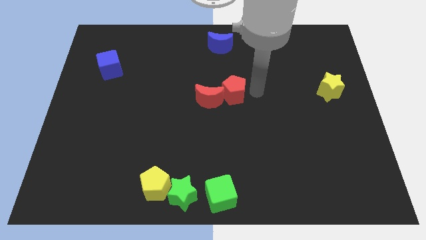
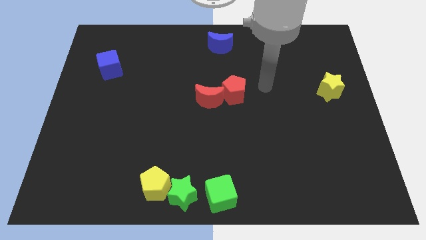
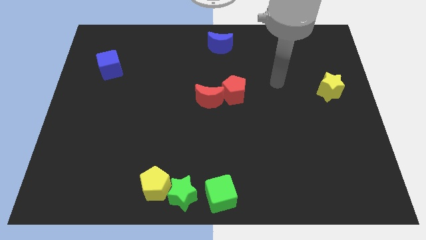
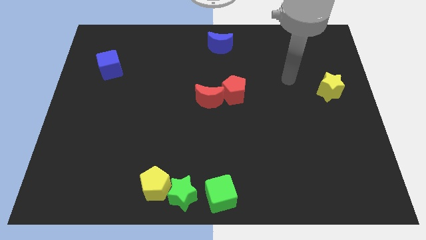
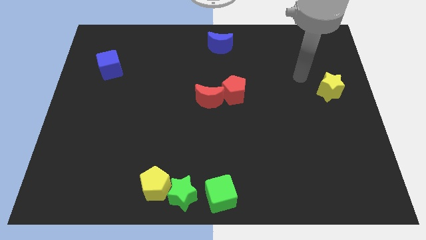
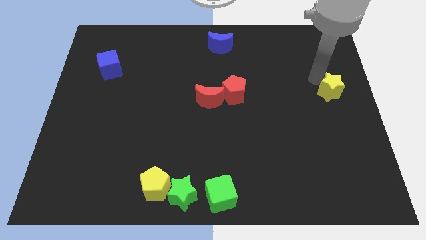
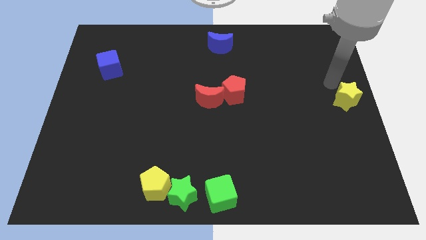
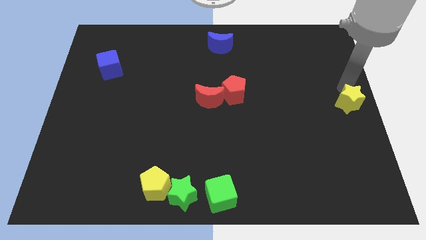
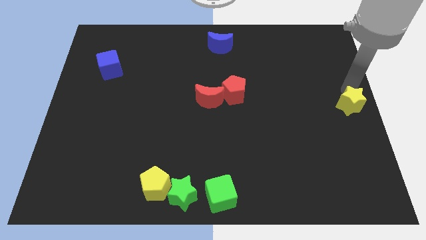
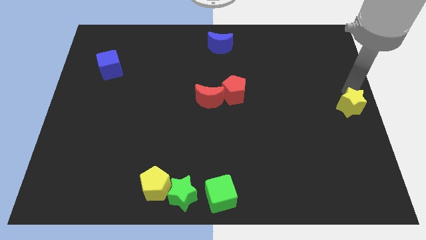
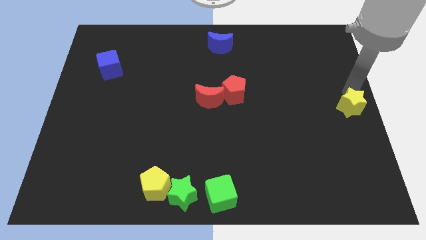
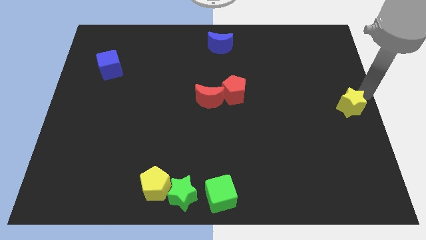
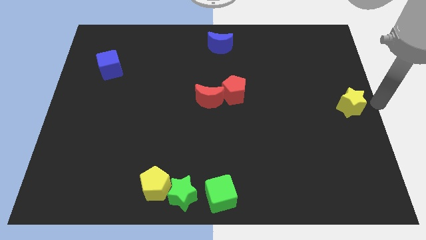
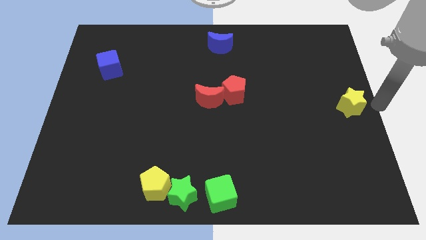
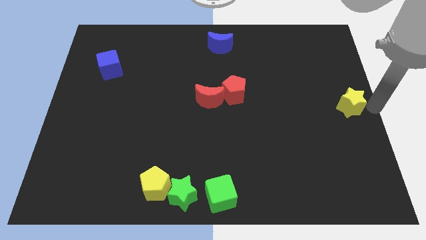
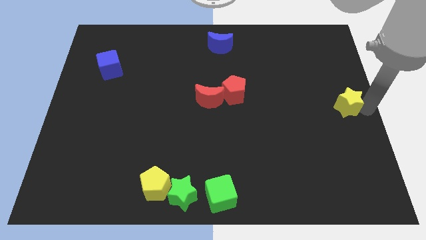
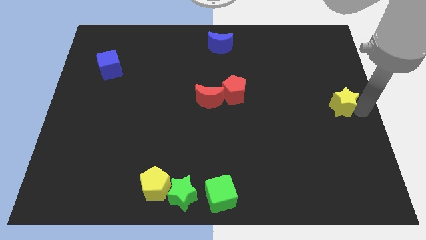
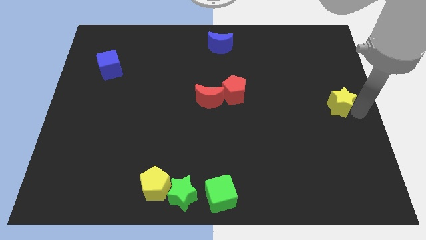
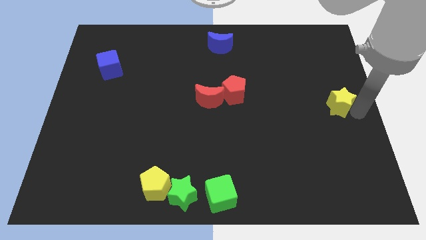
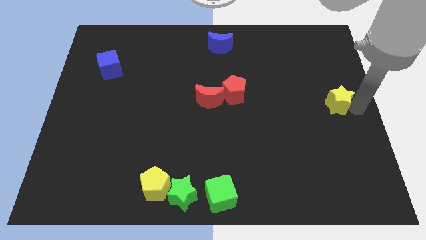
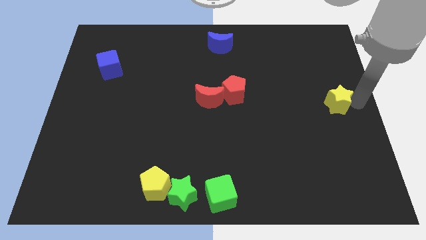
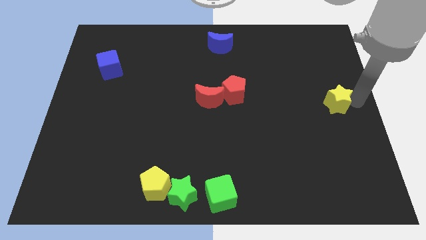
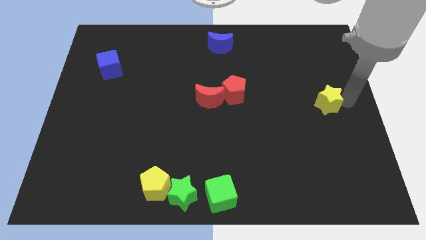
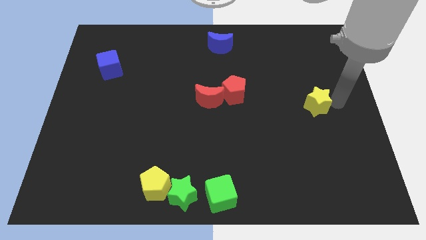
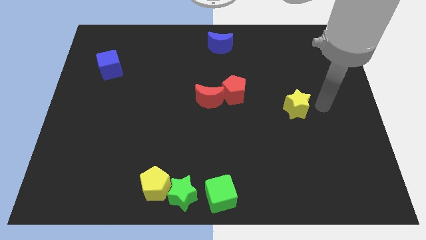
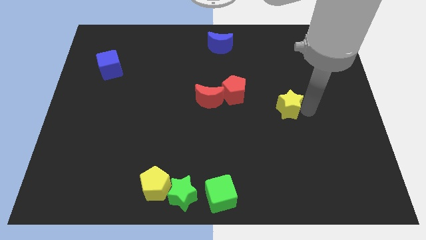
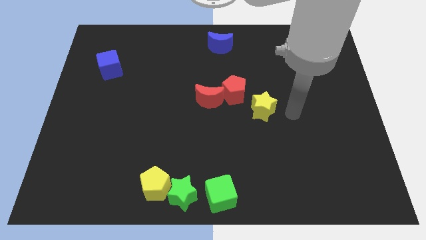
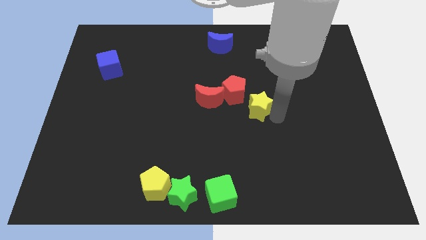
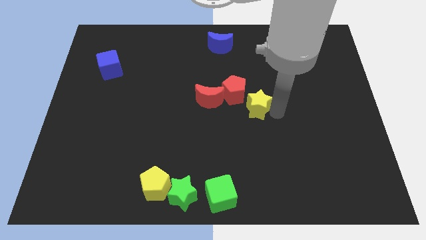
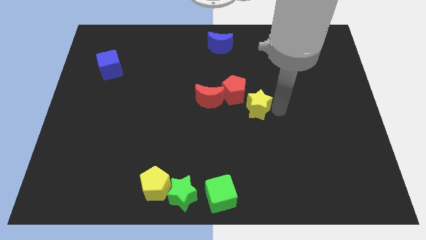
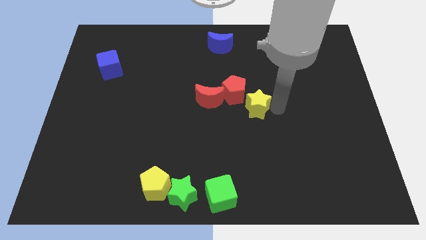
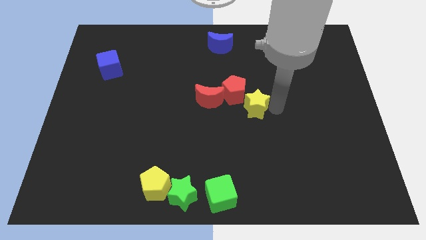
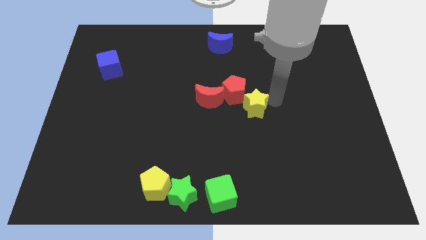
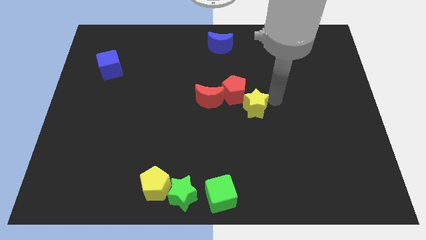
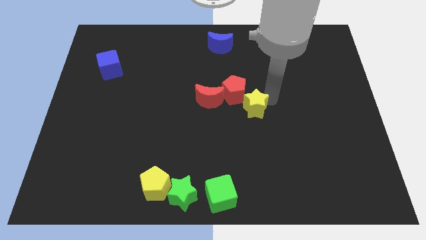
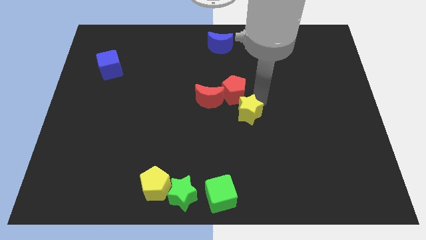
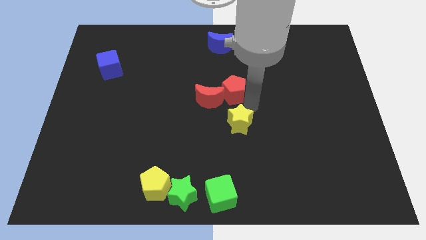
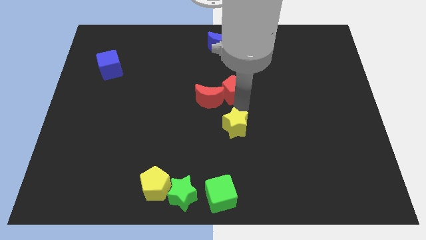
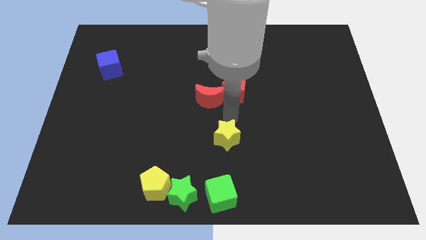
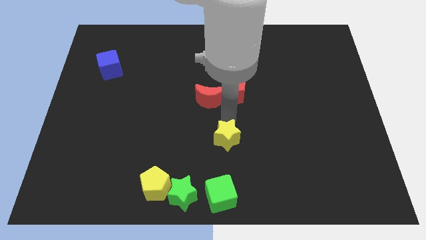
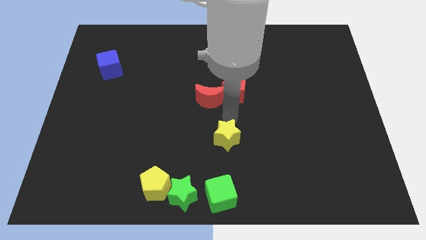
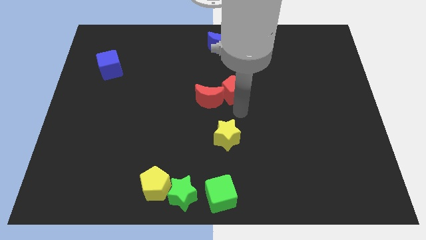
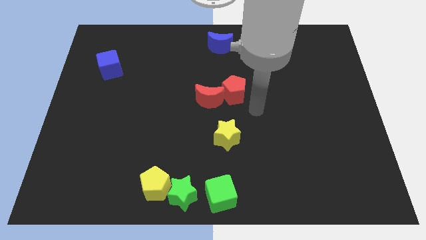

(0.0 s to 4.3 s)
place the yellow star in between the red pentagon and green cube

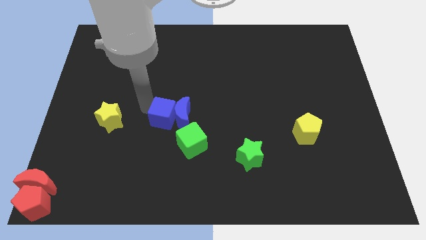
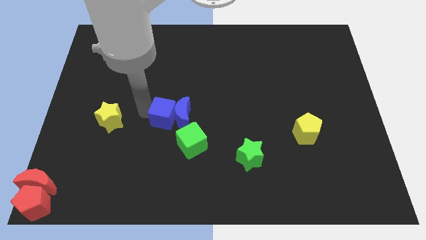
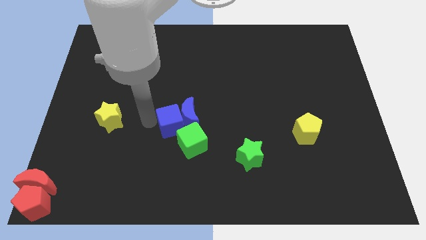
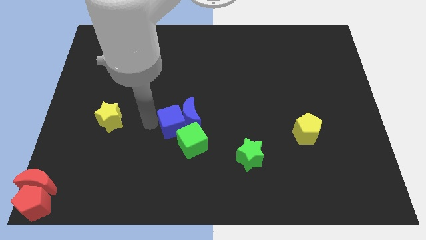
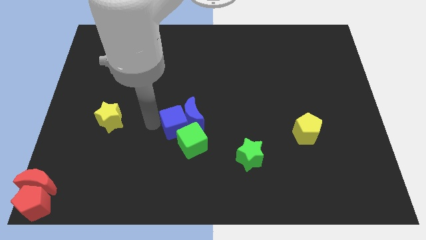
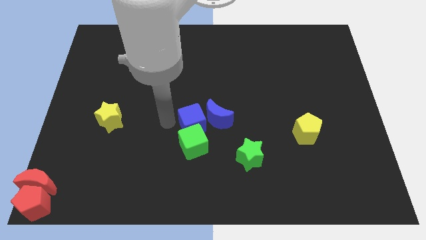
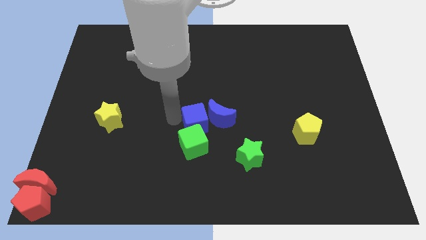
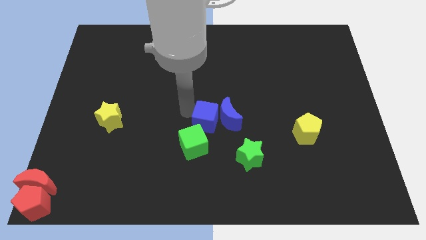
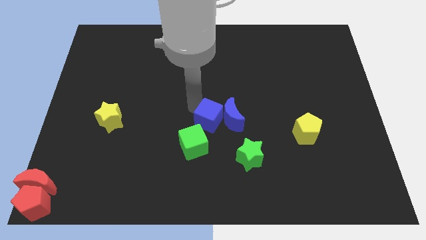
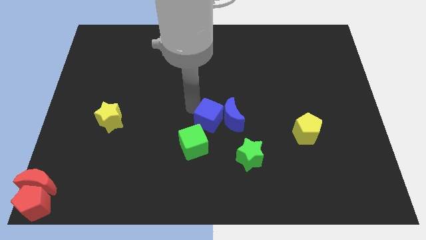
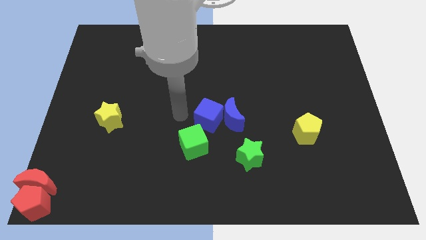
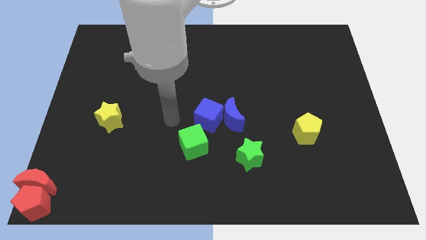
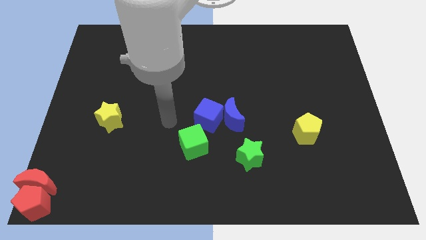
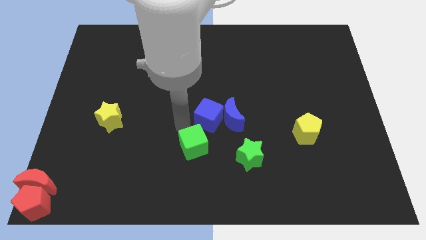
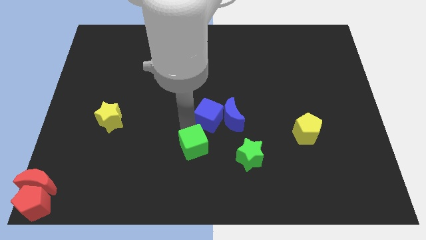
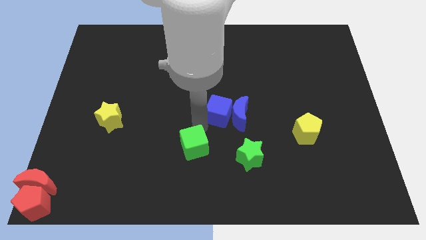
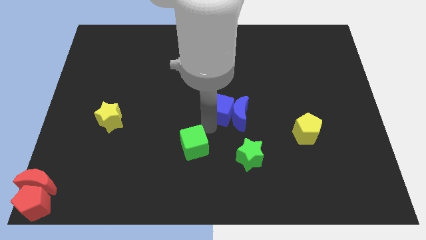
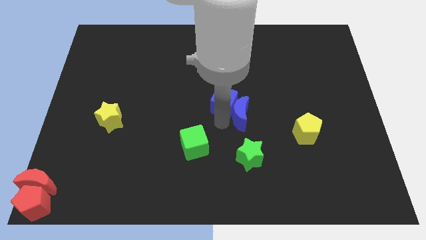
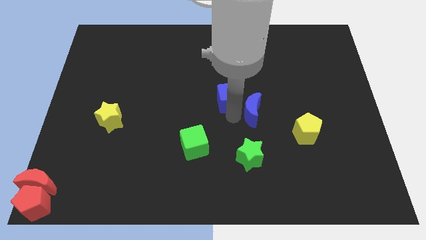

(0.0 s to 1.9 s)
move the blue moon above the green star

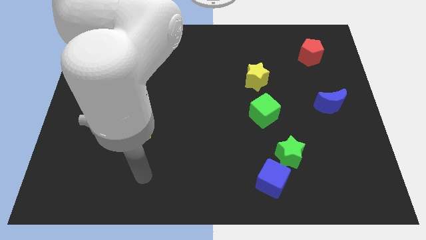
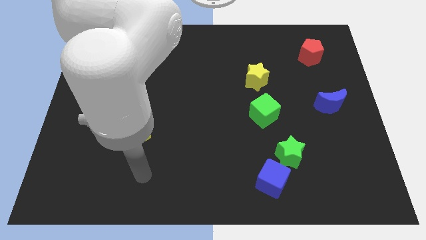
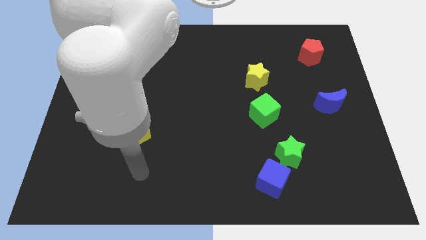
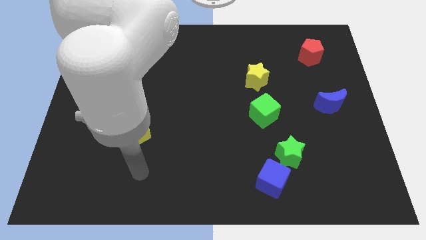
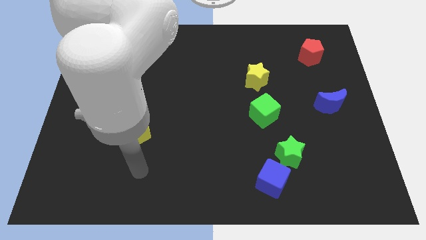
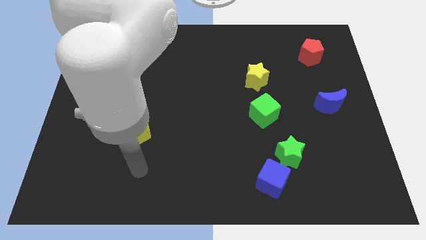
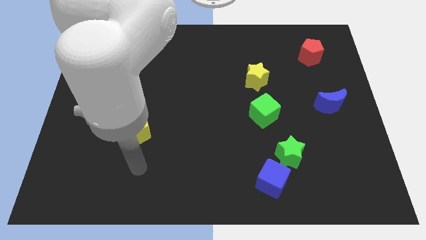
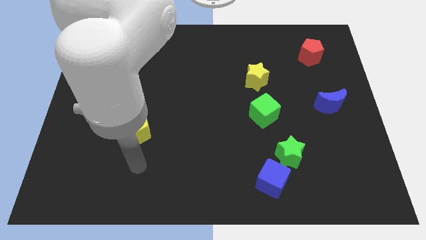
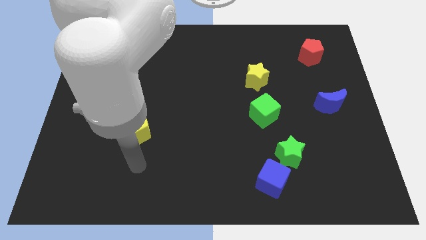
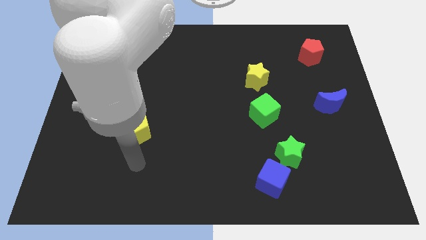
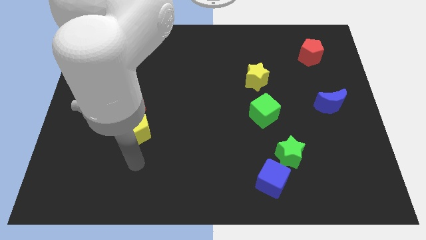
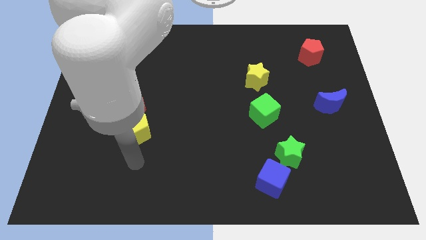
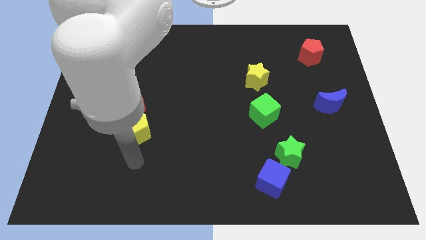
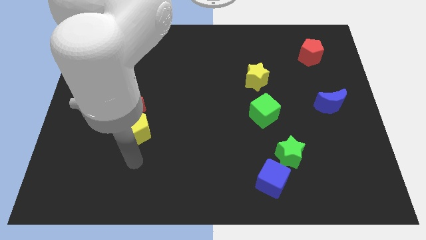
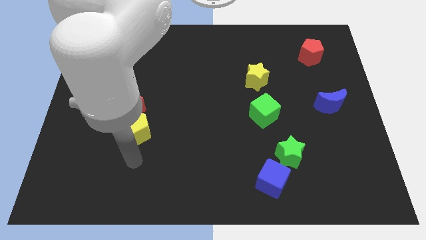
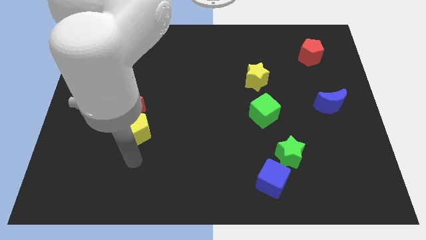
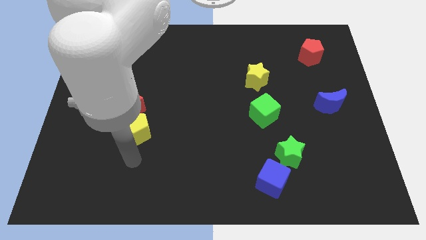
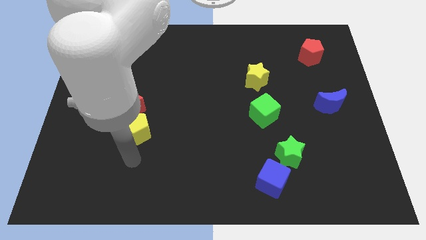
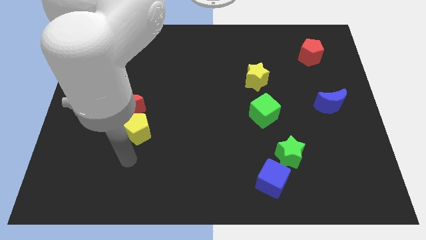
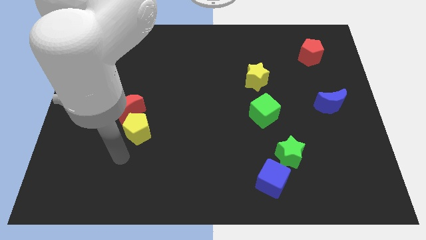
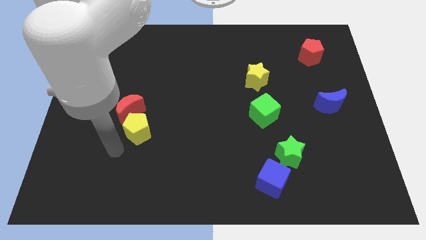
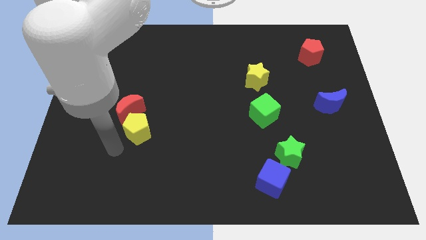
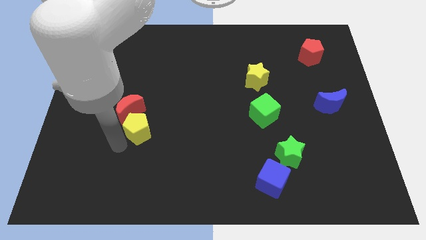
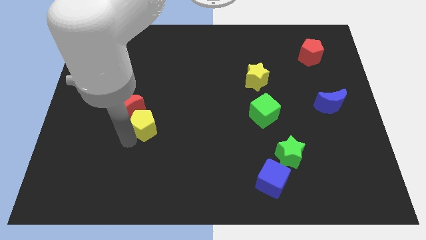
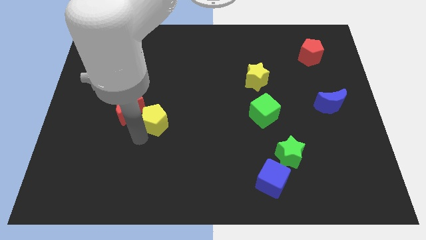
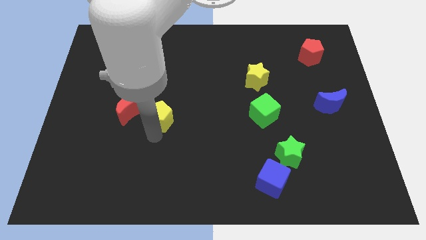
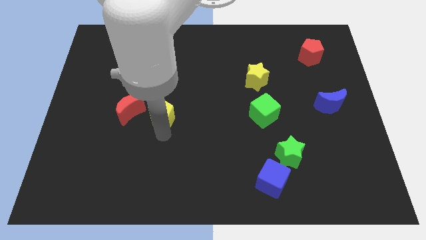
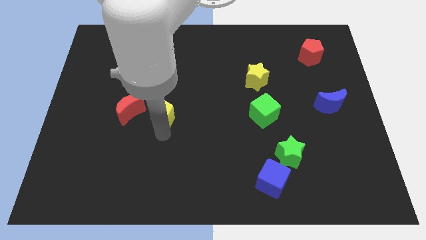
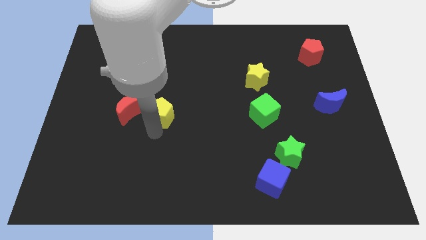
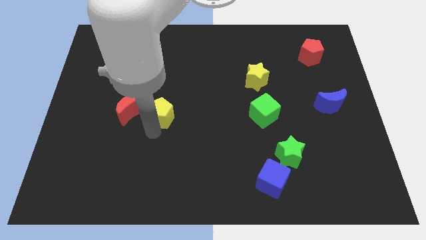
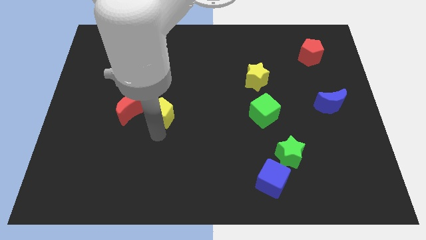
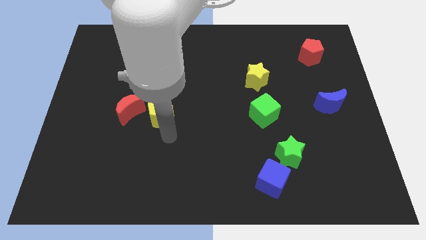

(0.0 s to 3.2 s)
separate yellow pentagon from the red crescent
